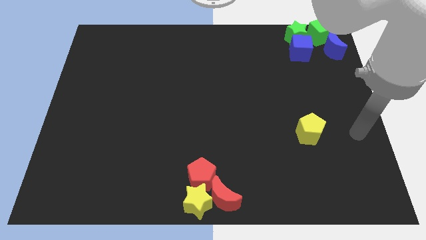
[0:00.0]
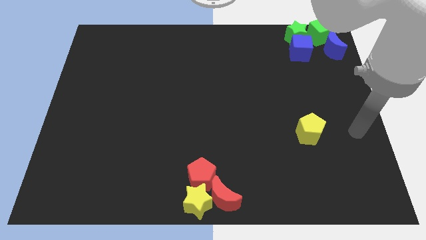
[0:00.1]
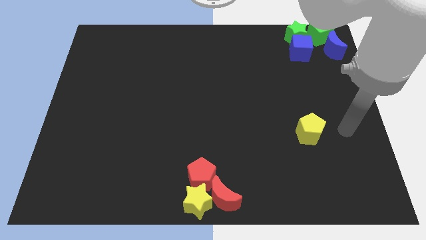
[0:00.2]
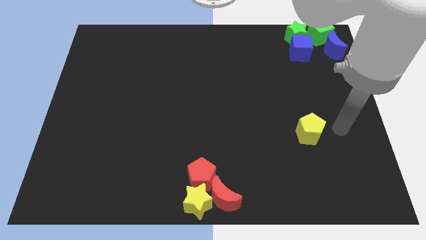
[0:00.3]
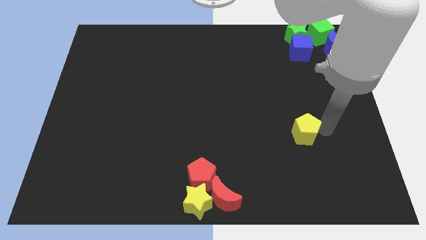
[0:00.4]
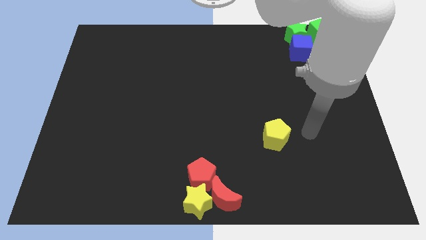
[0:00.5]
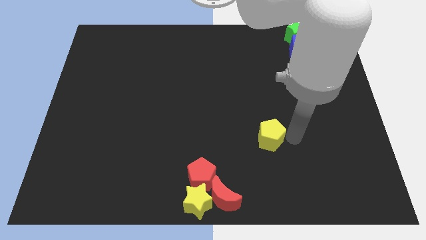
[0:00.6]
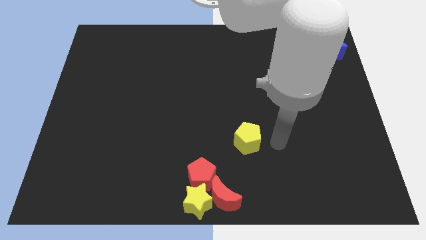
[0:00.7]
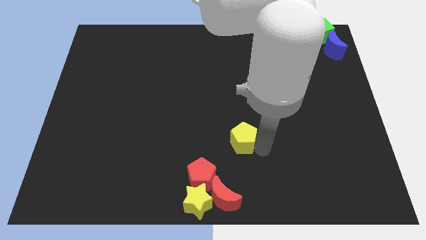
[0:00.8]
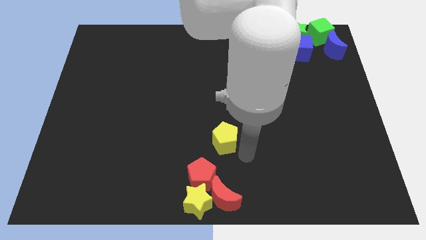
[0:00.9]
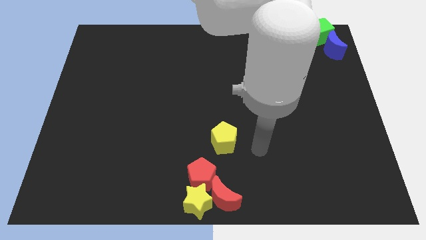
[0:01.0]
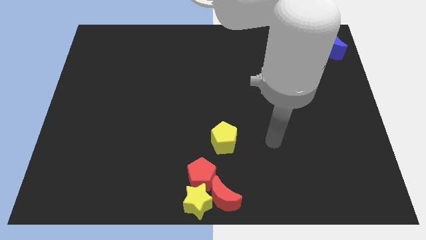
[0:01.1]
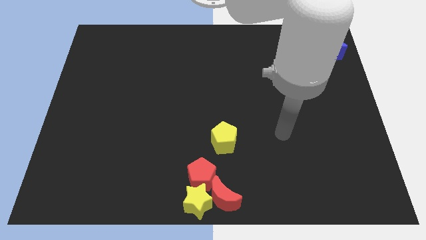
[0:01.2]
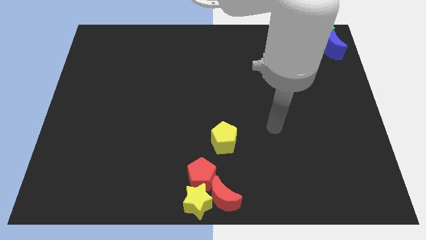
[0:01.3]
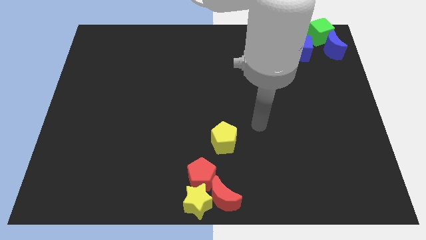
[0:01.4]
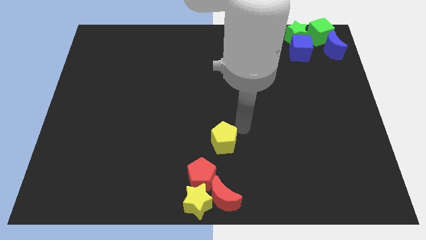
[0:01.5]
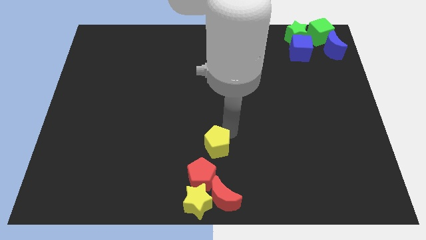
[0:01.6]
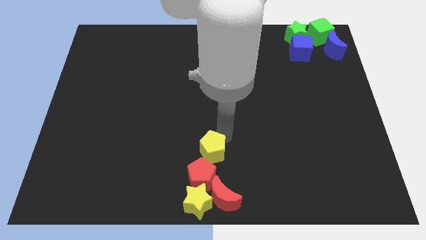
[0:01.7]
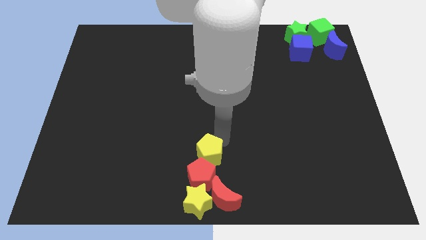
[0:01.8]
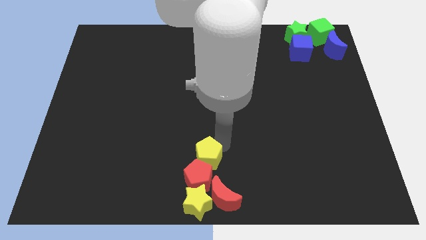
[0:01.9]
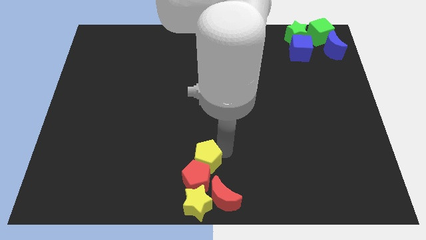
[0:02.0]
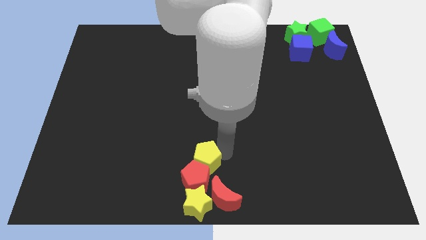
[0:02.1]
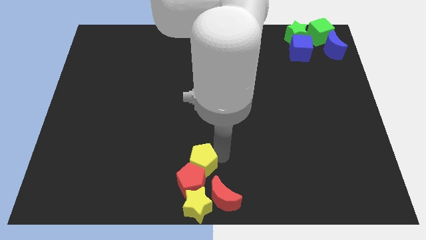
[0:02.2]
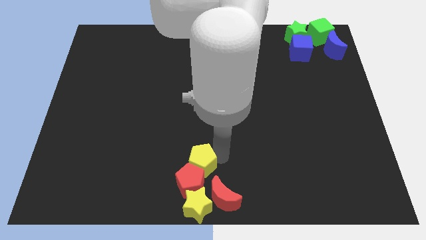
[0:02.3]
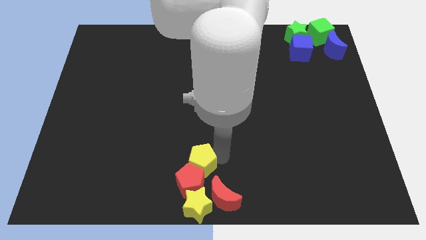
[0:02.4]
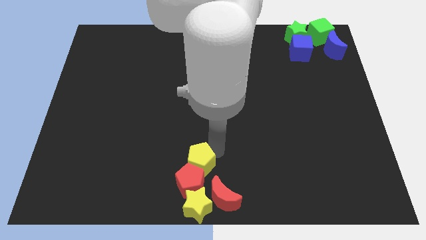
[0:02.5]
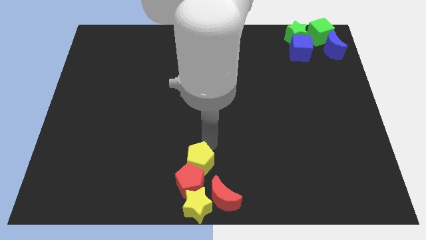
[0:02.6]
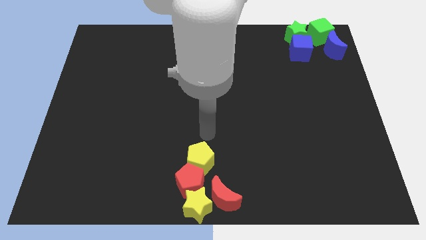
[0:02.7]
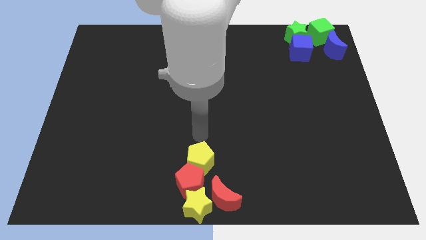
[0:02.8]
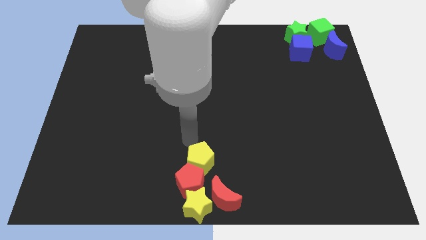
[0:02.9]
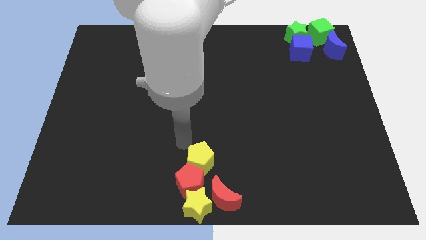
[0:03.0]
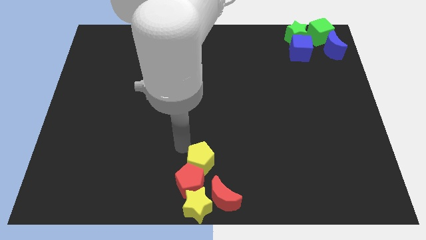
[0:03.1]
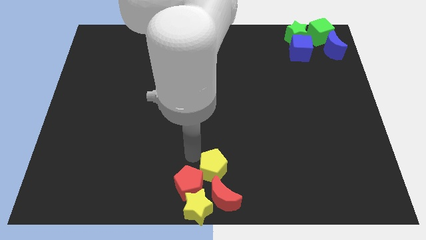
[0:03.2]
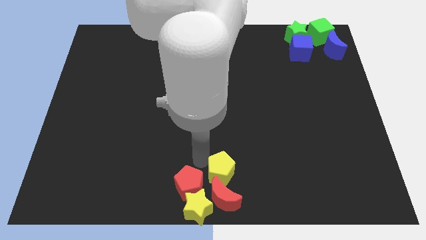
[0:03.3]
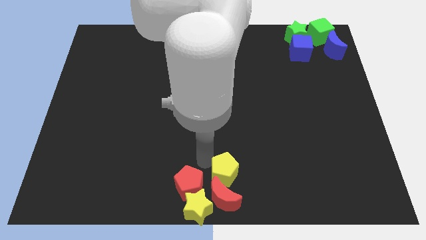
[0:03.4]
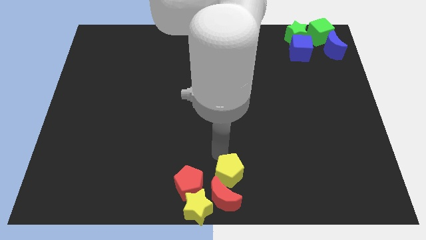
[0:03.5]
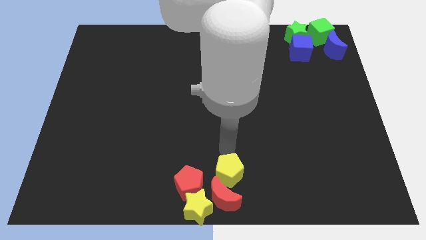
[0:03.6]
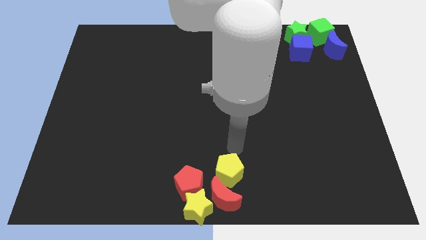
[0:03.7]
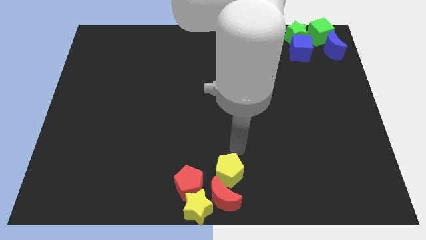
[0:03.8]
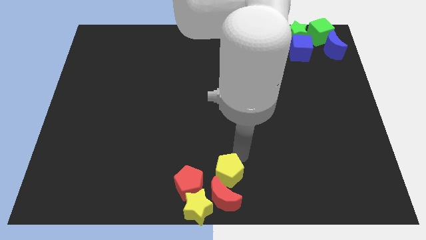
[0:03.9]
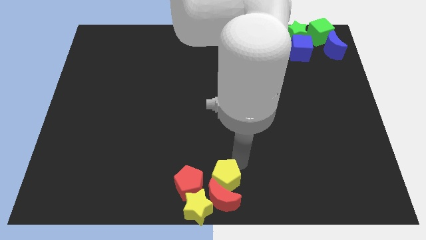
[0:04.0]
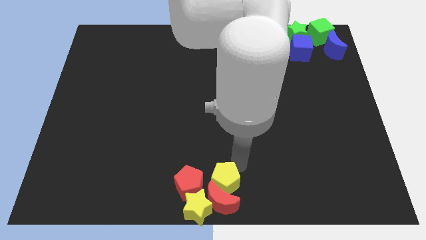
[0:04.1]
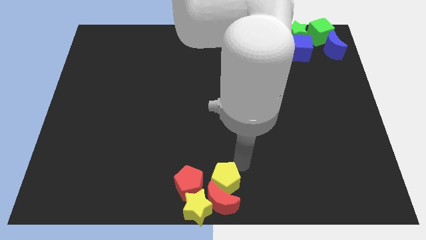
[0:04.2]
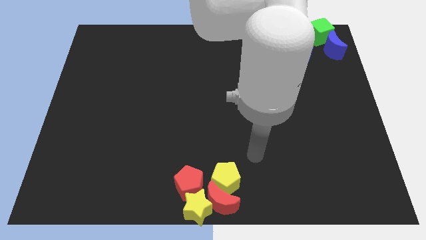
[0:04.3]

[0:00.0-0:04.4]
place the yellow pentagon above the red crescent

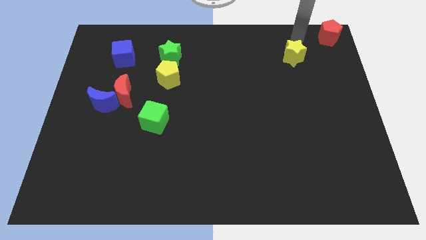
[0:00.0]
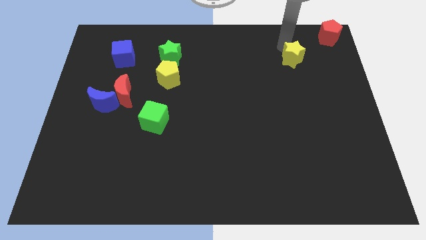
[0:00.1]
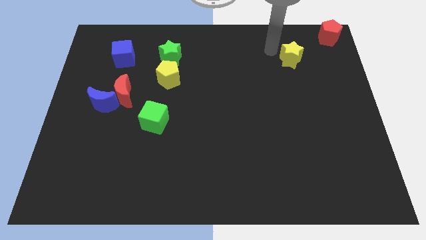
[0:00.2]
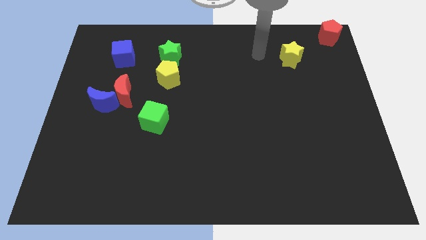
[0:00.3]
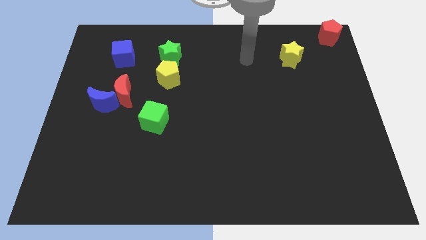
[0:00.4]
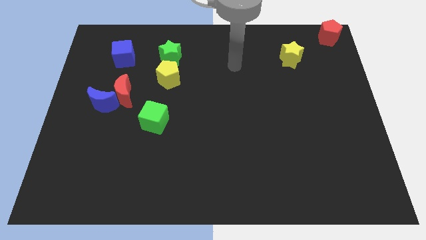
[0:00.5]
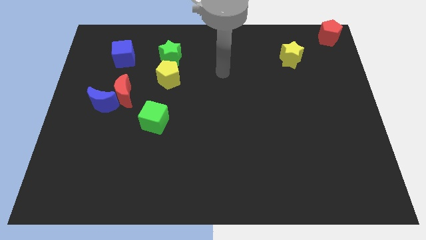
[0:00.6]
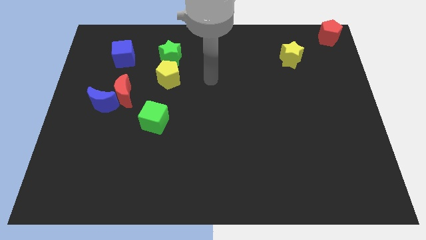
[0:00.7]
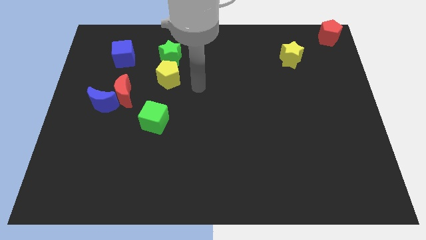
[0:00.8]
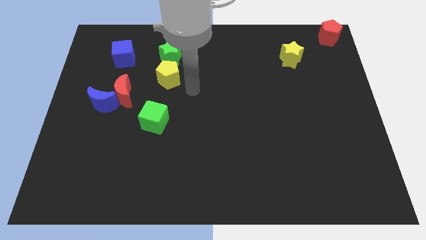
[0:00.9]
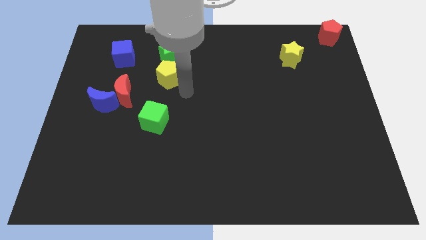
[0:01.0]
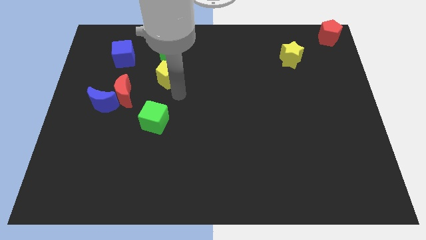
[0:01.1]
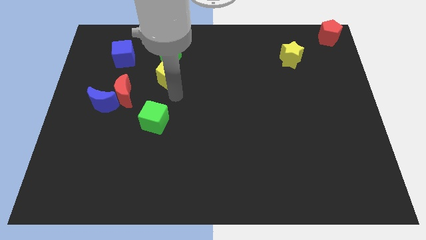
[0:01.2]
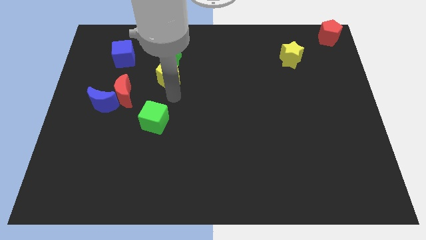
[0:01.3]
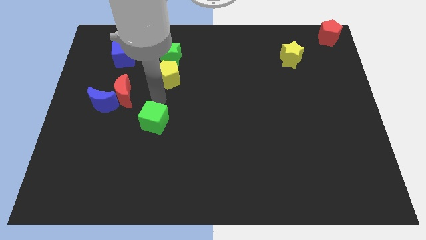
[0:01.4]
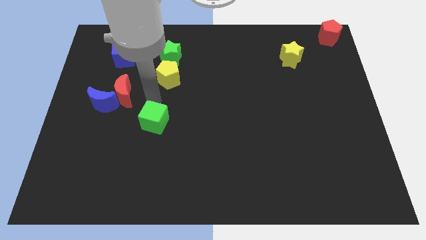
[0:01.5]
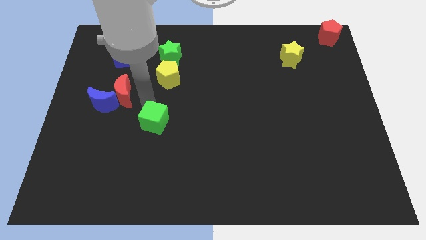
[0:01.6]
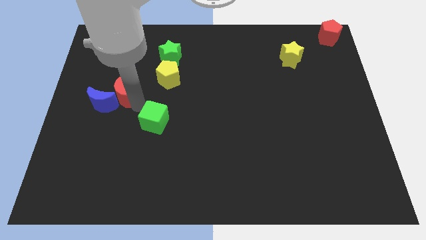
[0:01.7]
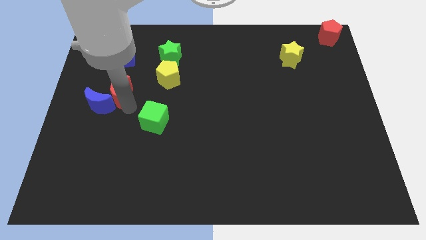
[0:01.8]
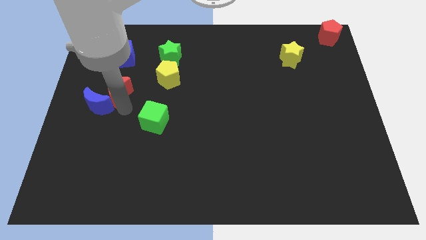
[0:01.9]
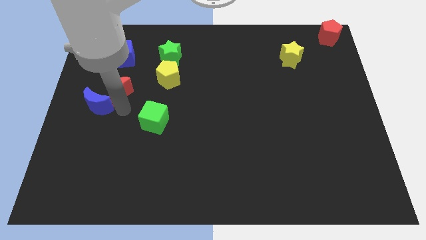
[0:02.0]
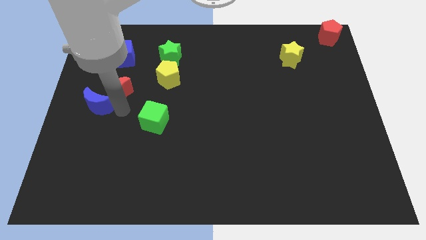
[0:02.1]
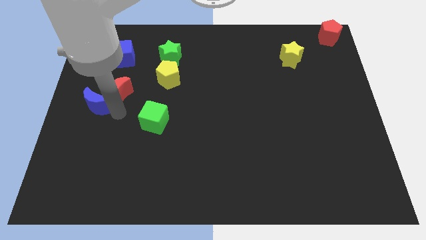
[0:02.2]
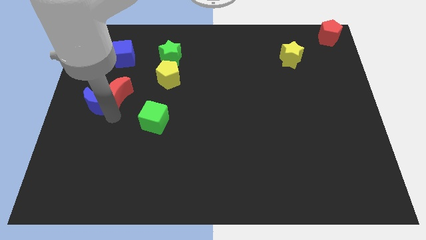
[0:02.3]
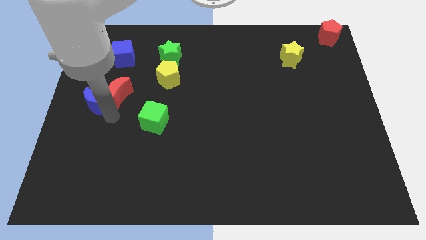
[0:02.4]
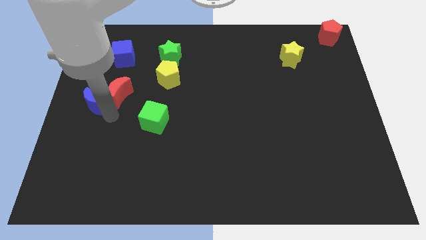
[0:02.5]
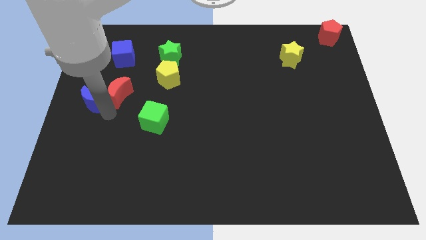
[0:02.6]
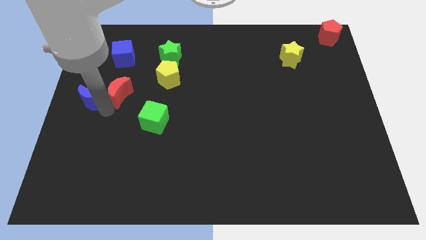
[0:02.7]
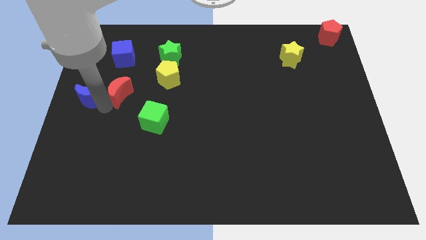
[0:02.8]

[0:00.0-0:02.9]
move your arm towards the red moon

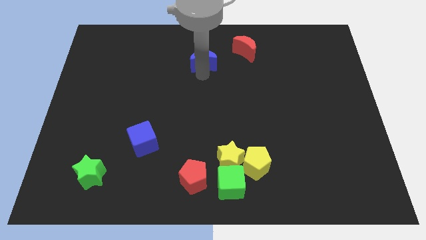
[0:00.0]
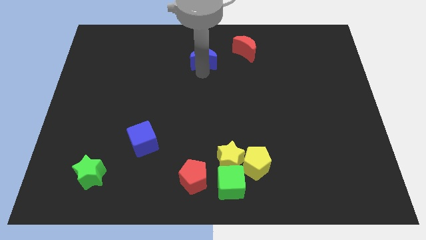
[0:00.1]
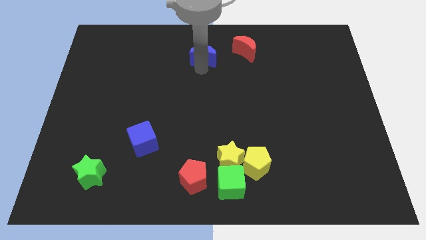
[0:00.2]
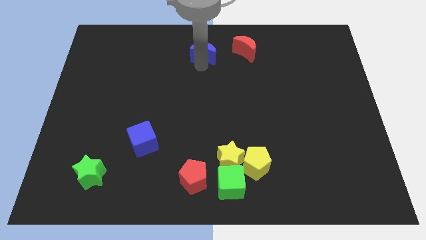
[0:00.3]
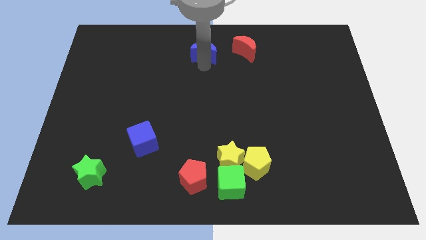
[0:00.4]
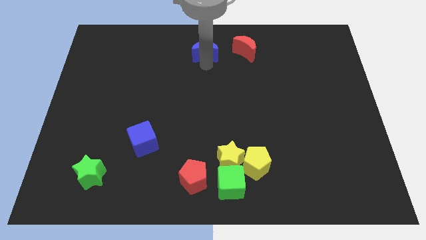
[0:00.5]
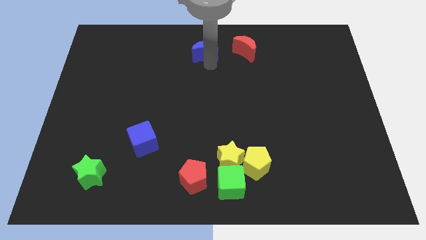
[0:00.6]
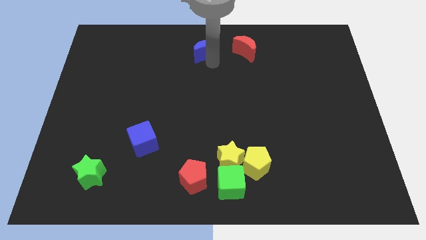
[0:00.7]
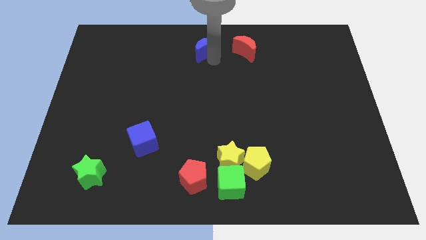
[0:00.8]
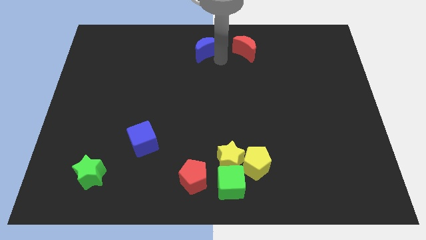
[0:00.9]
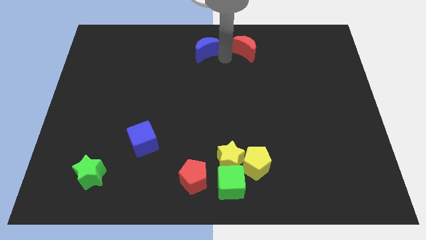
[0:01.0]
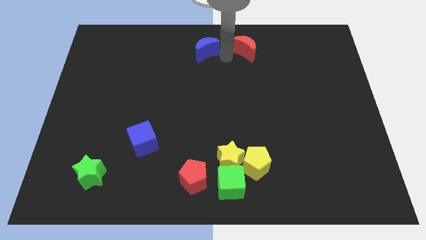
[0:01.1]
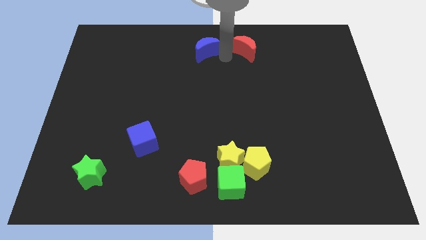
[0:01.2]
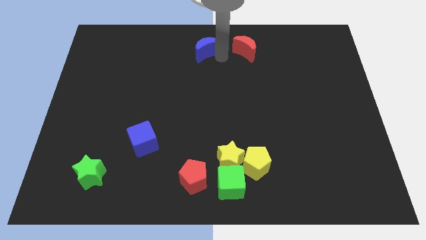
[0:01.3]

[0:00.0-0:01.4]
push the blue crescent towards the top center of the board

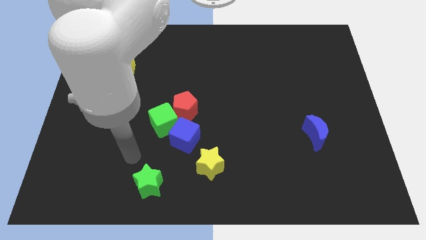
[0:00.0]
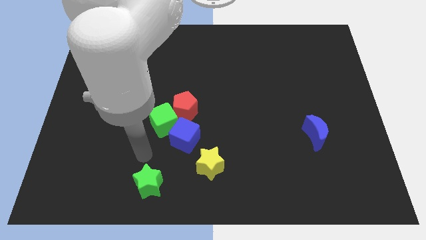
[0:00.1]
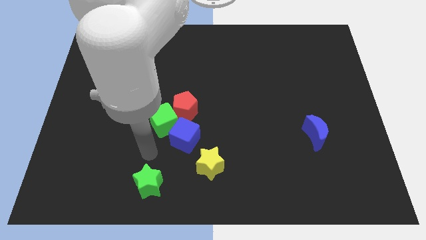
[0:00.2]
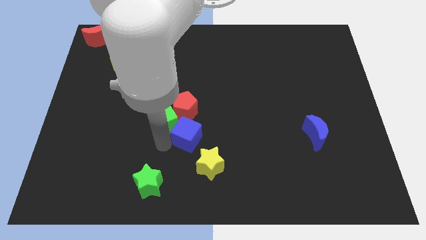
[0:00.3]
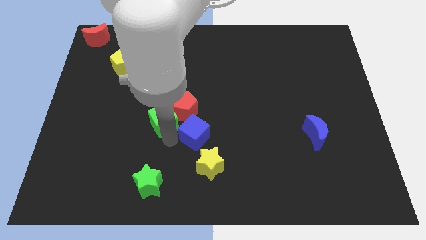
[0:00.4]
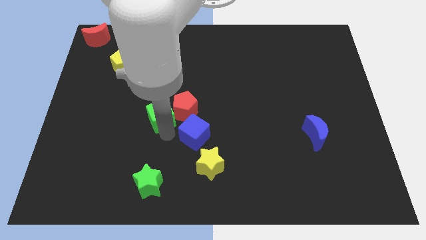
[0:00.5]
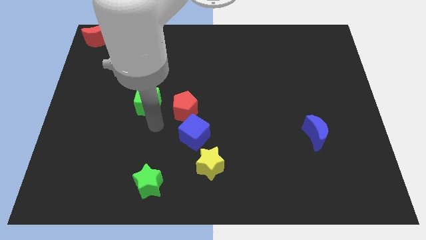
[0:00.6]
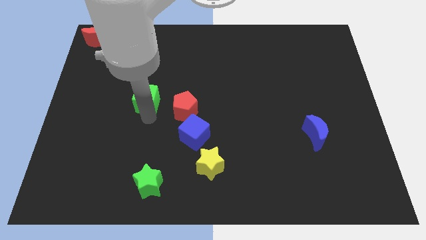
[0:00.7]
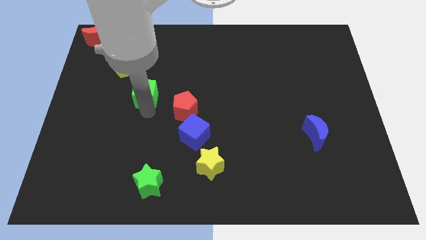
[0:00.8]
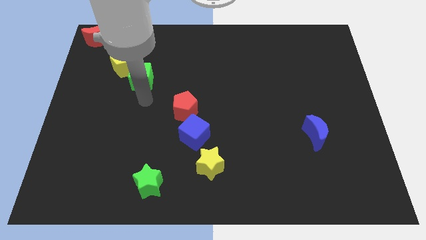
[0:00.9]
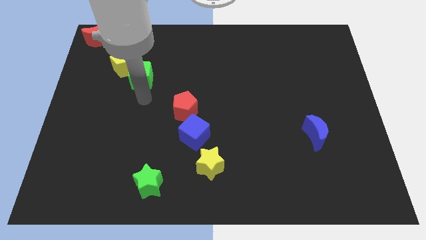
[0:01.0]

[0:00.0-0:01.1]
separate green and blue cubes
